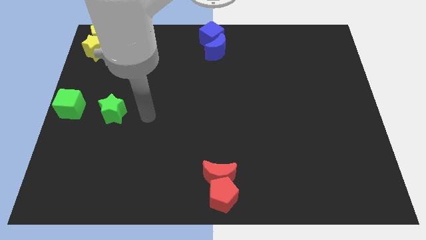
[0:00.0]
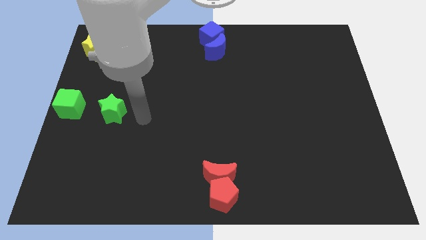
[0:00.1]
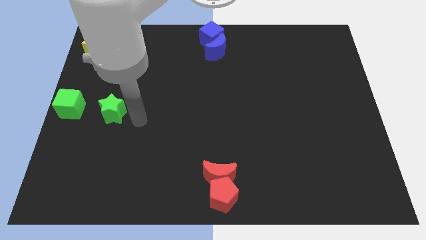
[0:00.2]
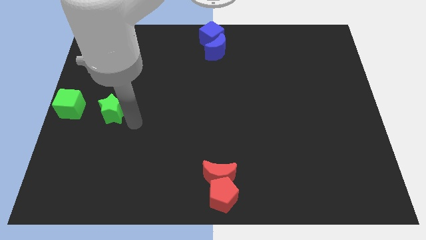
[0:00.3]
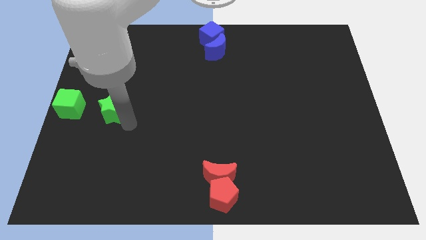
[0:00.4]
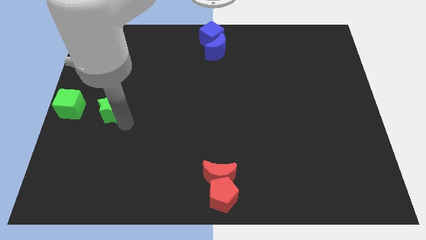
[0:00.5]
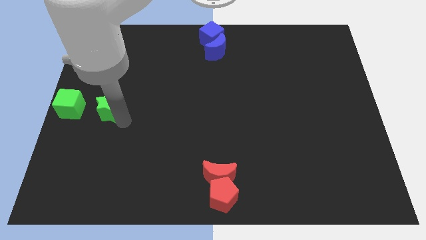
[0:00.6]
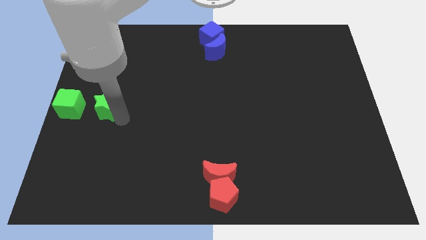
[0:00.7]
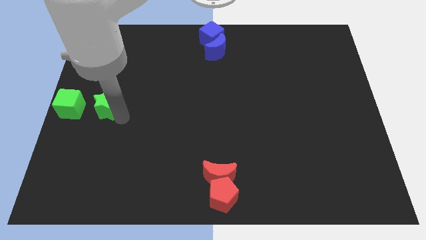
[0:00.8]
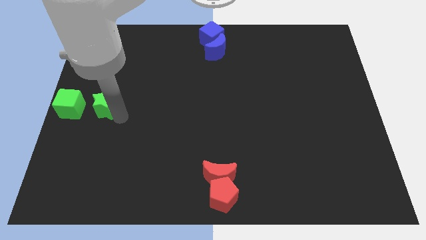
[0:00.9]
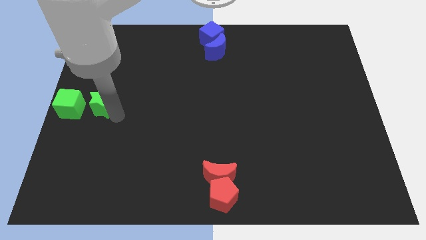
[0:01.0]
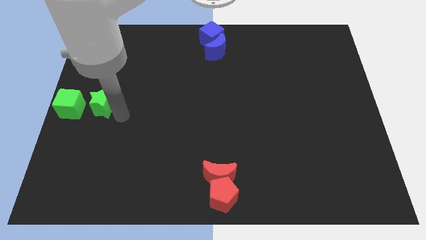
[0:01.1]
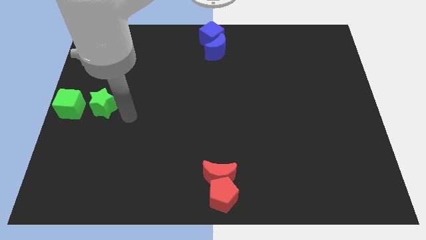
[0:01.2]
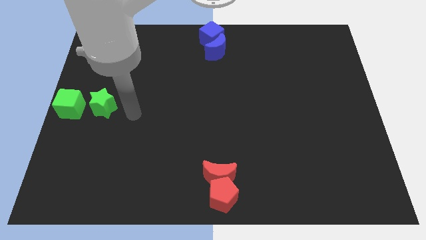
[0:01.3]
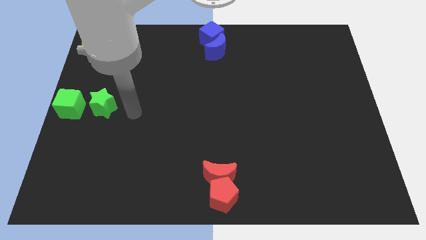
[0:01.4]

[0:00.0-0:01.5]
push the green star towards the green cube

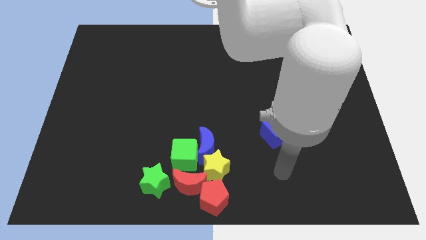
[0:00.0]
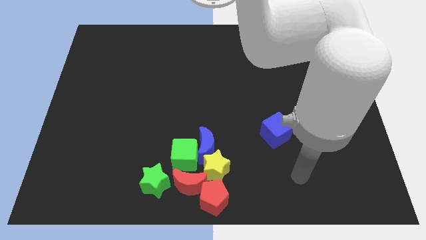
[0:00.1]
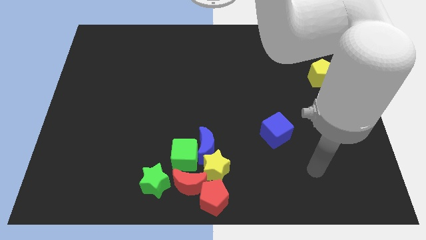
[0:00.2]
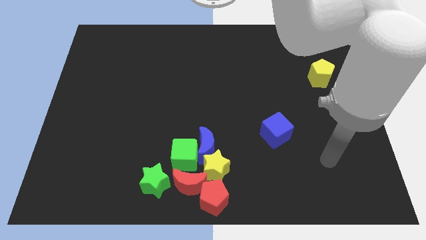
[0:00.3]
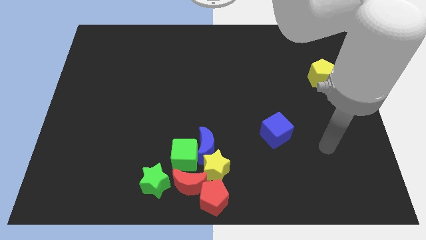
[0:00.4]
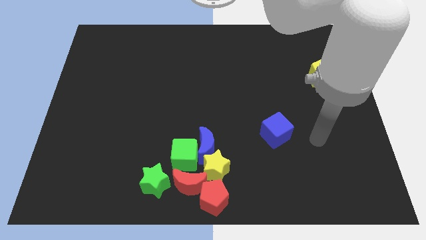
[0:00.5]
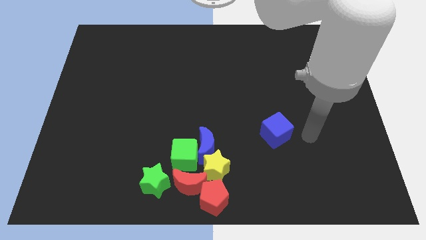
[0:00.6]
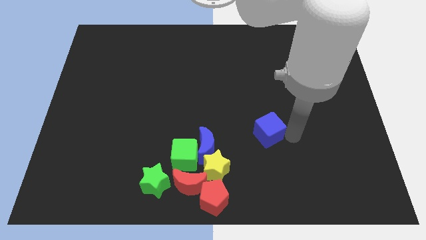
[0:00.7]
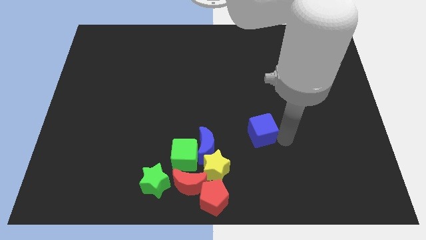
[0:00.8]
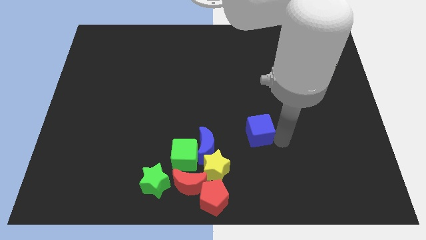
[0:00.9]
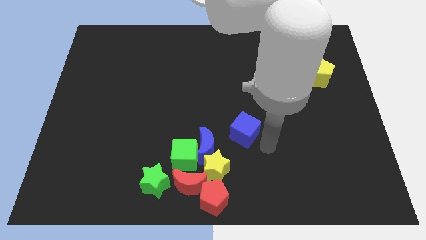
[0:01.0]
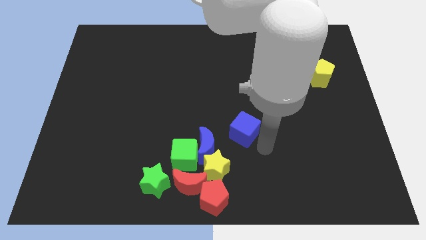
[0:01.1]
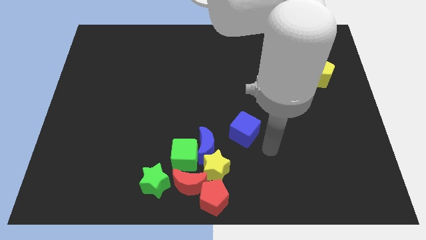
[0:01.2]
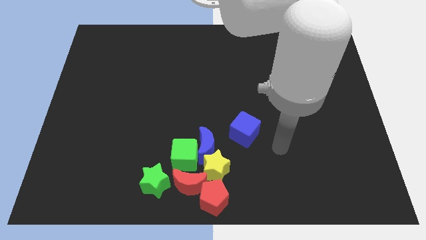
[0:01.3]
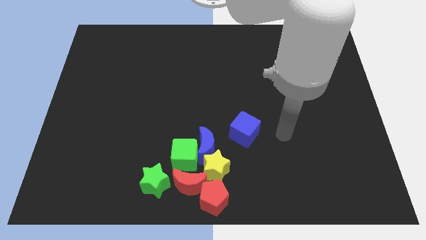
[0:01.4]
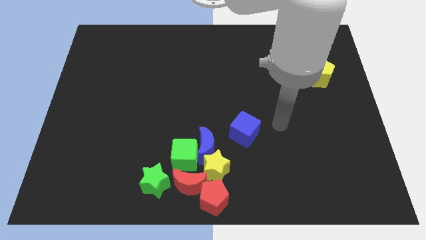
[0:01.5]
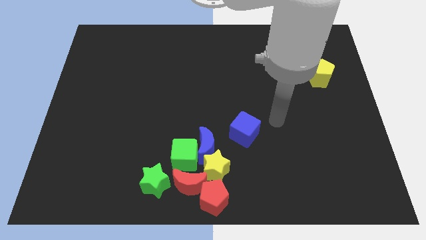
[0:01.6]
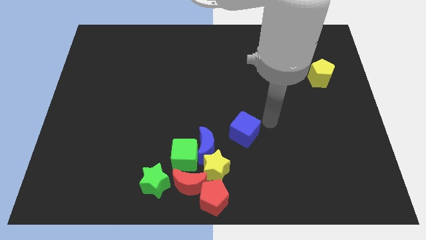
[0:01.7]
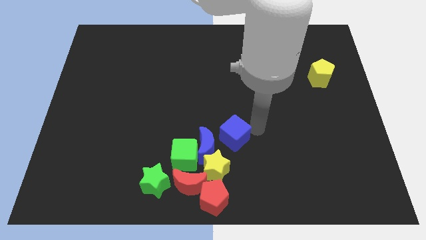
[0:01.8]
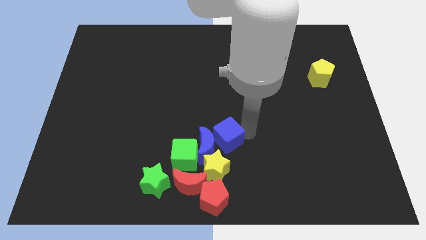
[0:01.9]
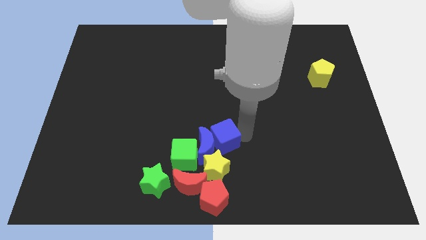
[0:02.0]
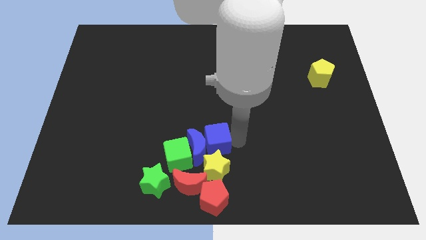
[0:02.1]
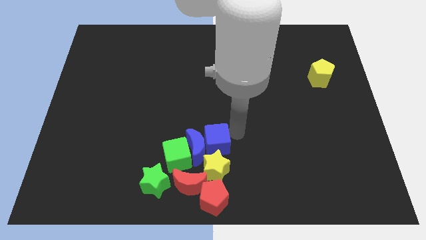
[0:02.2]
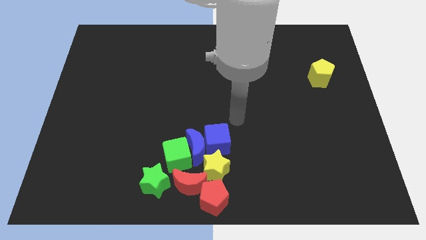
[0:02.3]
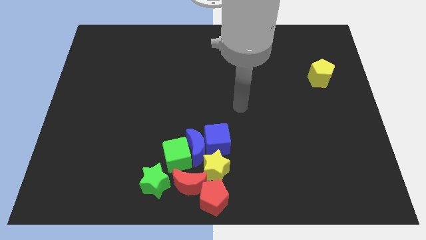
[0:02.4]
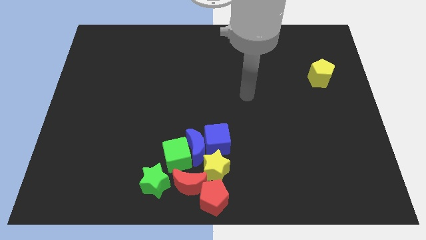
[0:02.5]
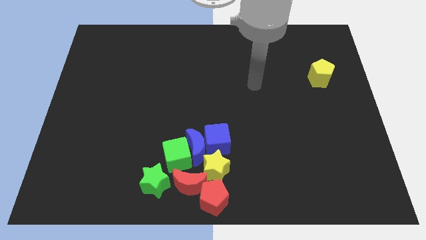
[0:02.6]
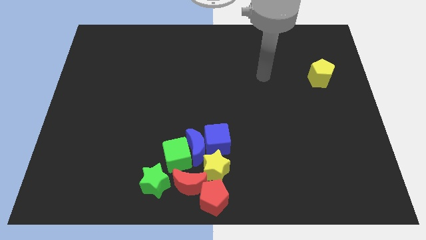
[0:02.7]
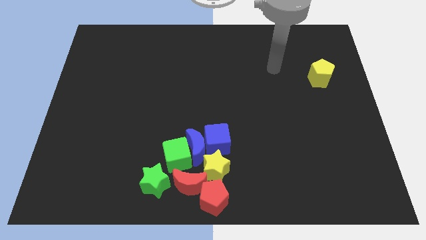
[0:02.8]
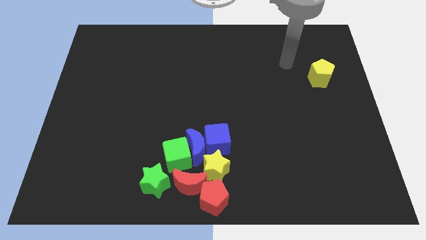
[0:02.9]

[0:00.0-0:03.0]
move the blue cube into the right of the blue crescent to the bottom center of the board

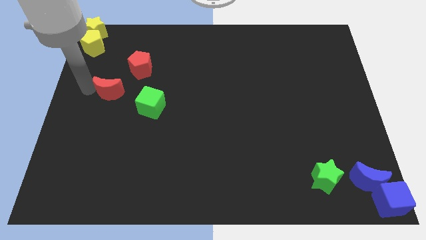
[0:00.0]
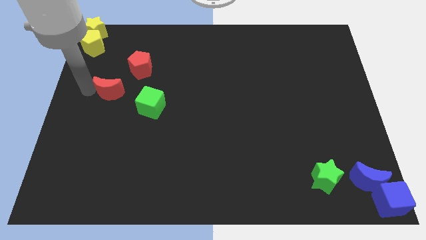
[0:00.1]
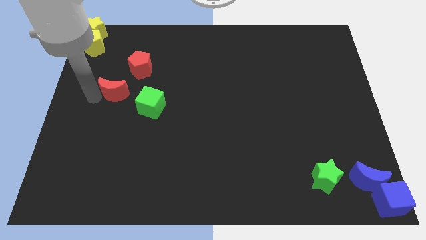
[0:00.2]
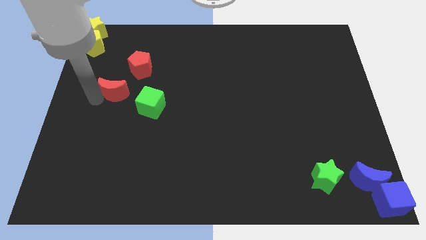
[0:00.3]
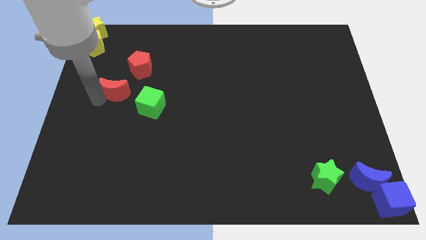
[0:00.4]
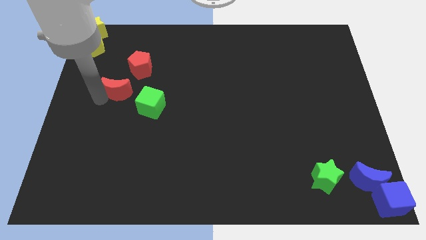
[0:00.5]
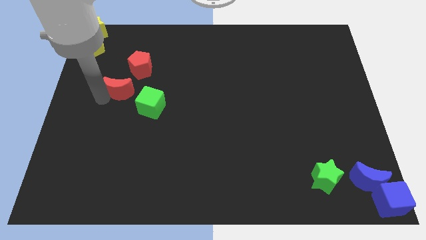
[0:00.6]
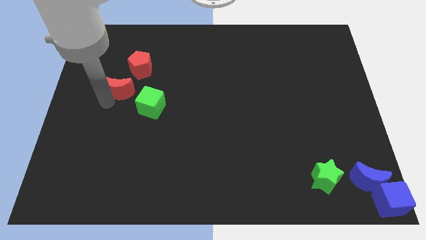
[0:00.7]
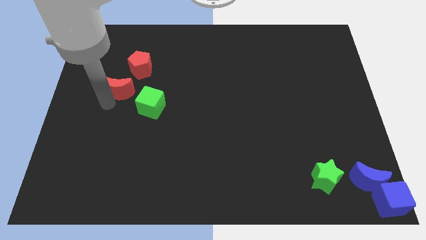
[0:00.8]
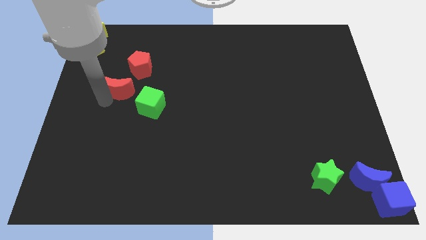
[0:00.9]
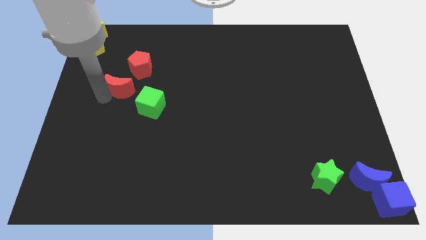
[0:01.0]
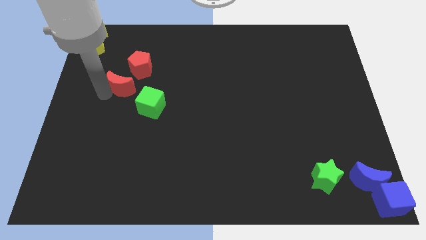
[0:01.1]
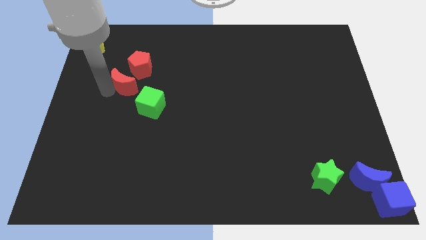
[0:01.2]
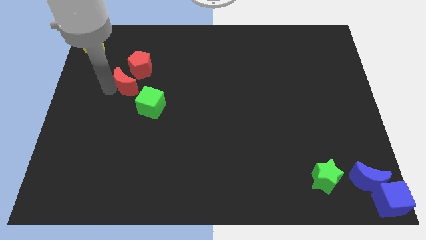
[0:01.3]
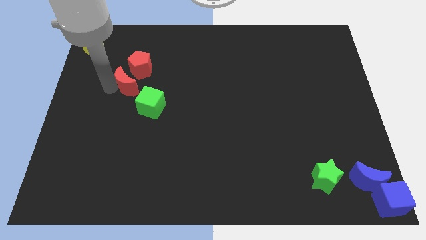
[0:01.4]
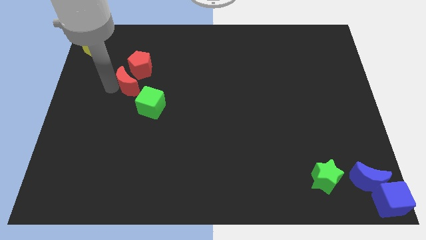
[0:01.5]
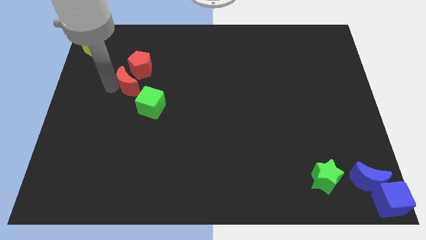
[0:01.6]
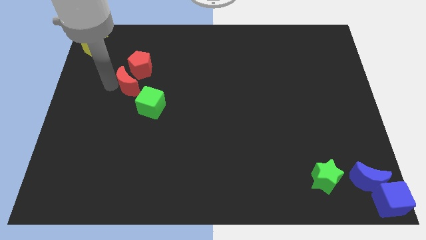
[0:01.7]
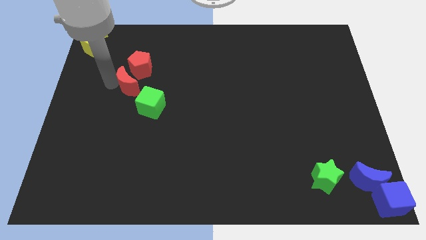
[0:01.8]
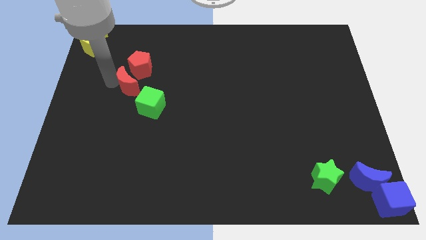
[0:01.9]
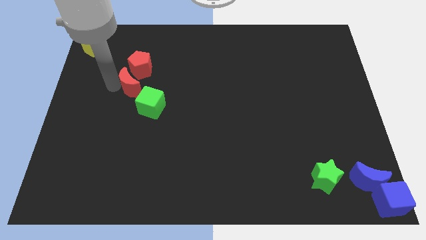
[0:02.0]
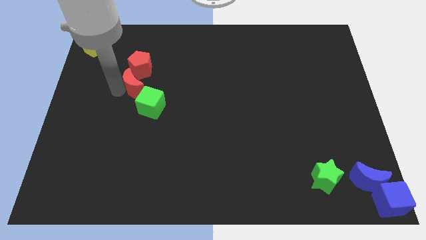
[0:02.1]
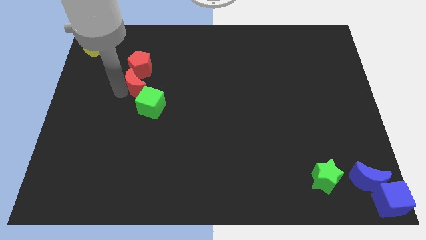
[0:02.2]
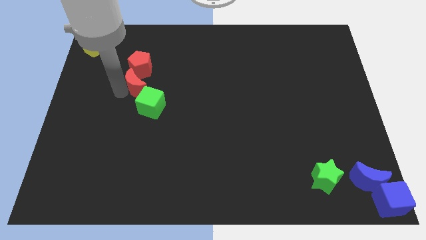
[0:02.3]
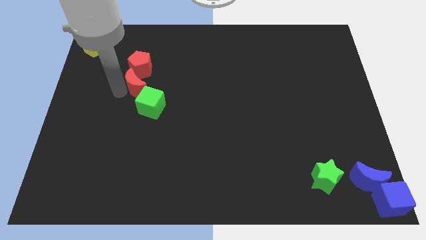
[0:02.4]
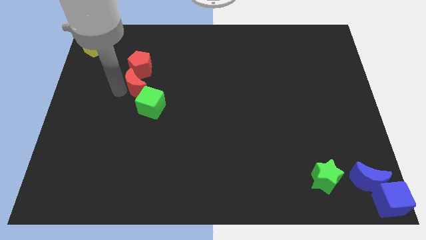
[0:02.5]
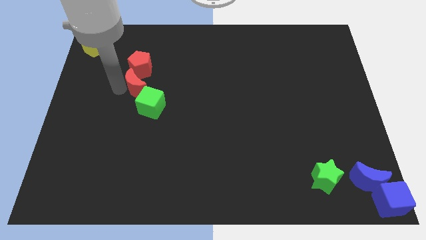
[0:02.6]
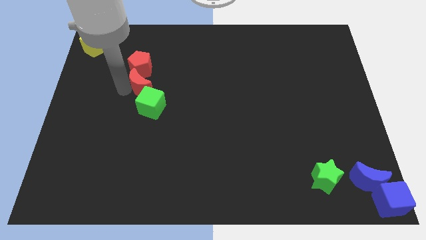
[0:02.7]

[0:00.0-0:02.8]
push the red crescent in between red pentagon and green cube

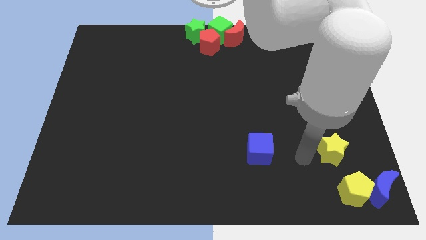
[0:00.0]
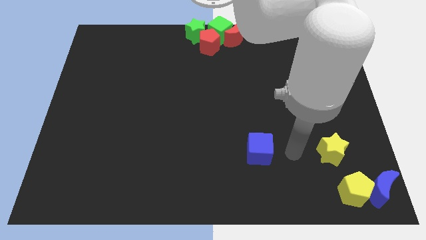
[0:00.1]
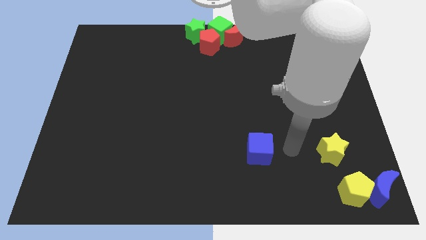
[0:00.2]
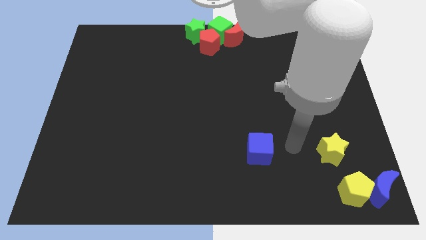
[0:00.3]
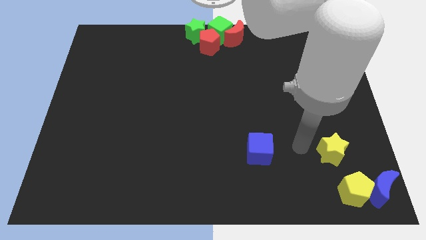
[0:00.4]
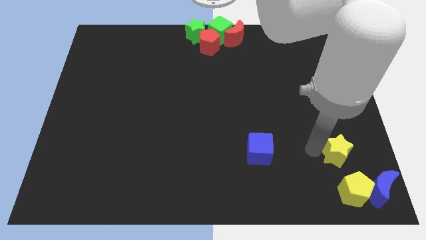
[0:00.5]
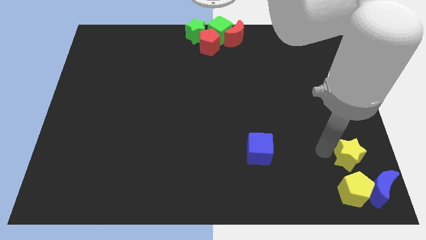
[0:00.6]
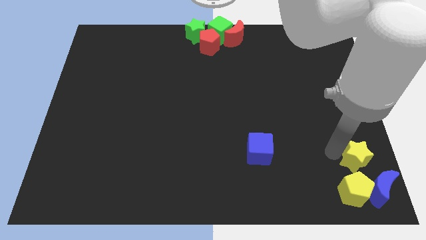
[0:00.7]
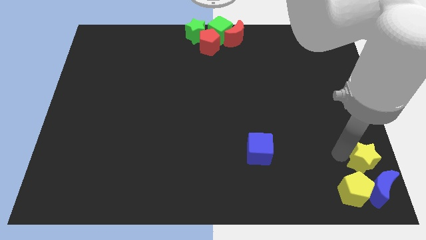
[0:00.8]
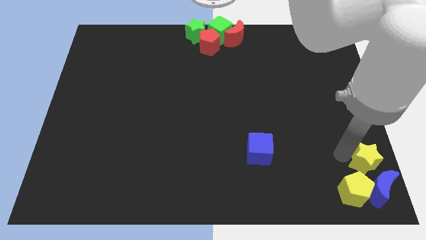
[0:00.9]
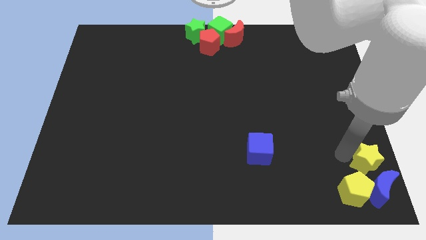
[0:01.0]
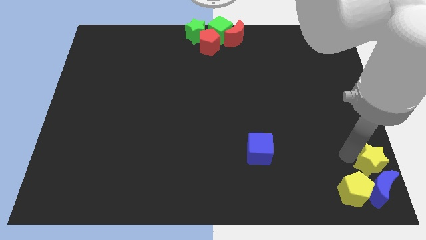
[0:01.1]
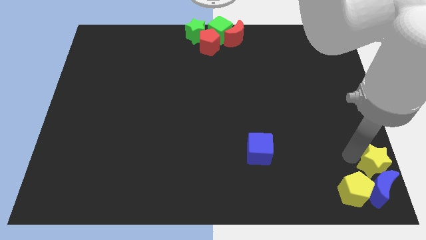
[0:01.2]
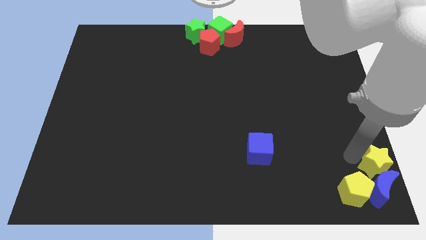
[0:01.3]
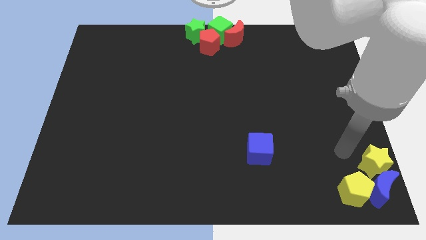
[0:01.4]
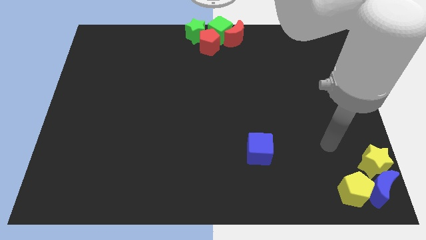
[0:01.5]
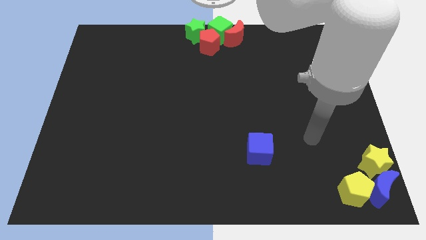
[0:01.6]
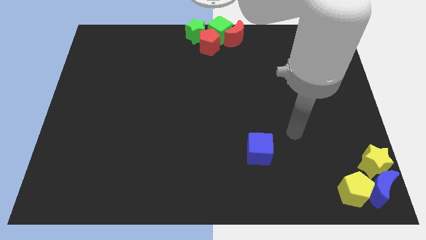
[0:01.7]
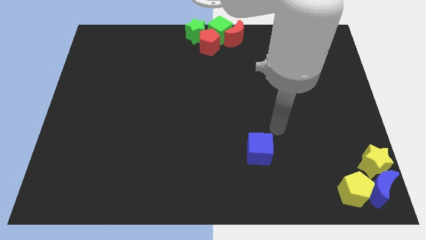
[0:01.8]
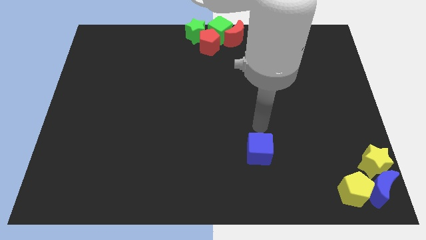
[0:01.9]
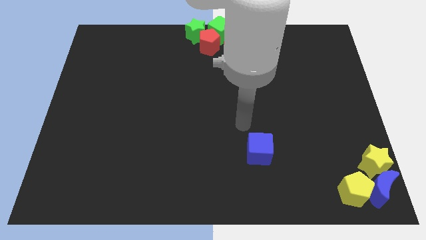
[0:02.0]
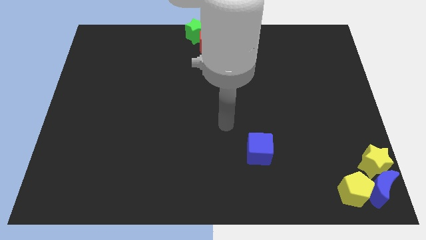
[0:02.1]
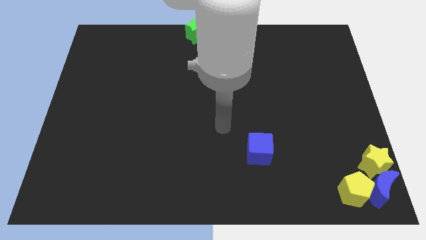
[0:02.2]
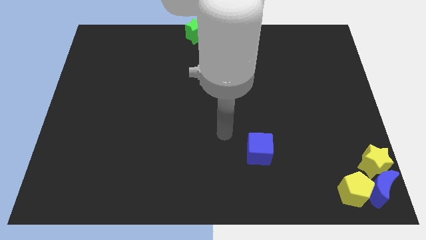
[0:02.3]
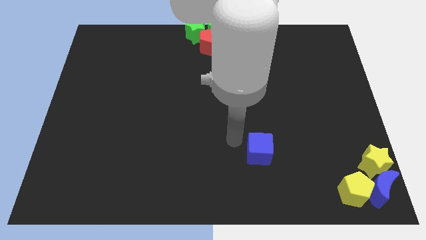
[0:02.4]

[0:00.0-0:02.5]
place the arm near the blue cube
